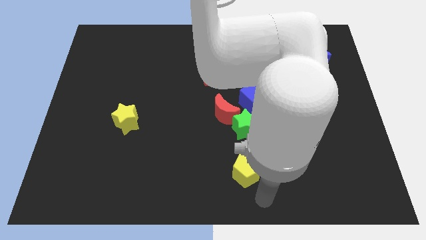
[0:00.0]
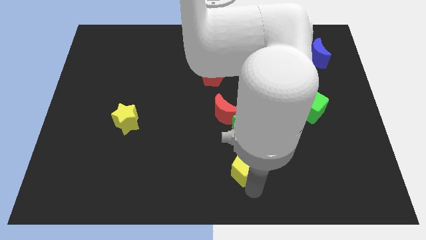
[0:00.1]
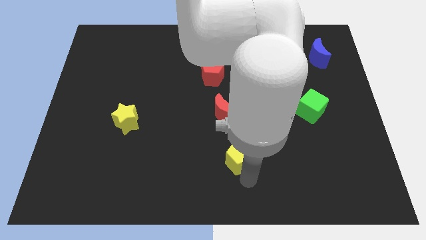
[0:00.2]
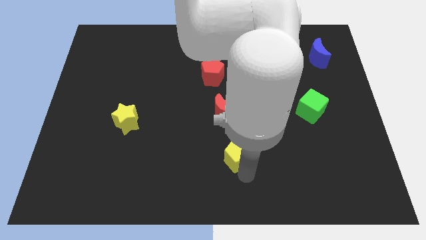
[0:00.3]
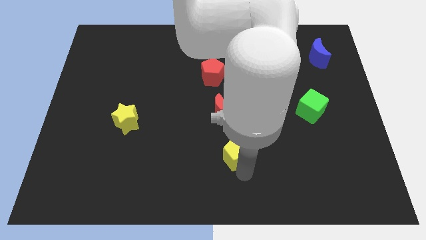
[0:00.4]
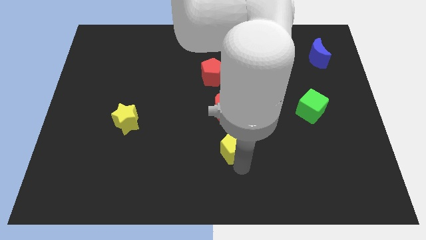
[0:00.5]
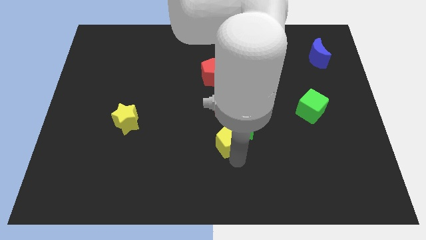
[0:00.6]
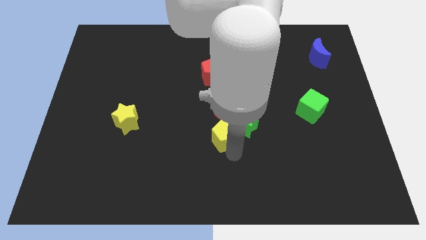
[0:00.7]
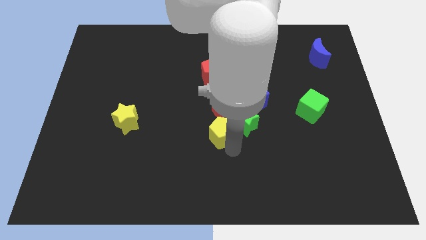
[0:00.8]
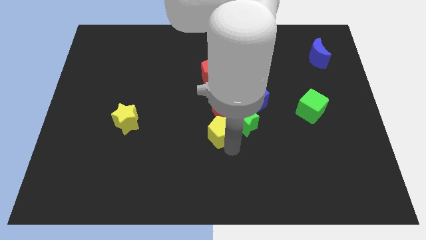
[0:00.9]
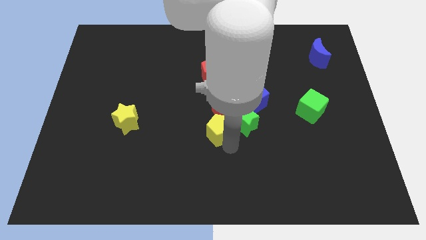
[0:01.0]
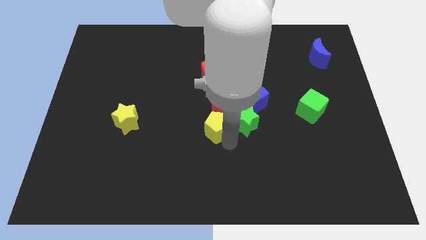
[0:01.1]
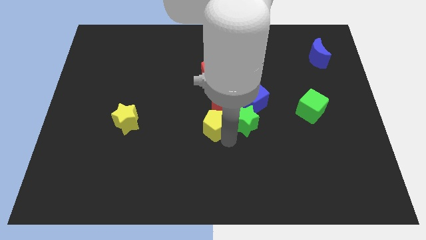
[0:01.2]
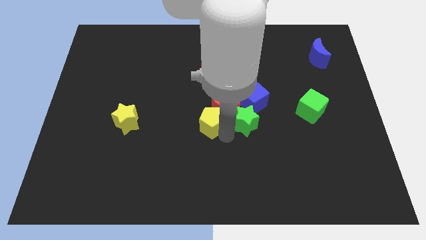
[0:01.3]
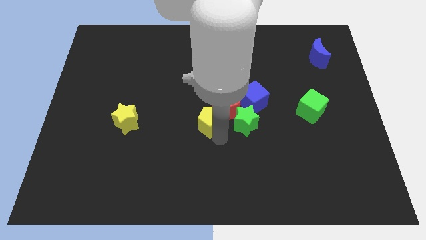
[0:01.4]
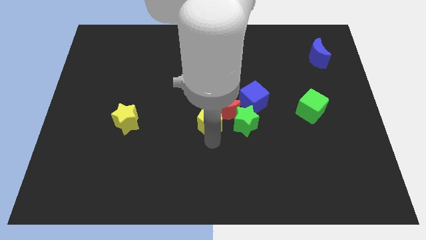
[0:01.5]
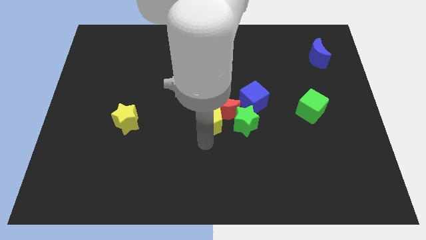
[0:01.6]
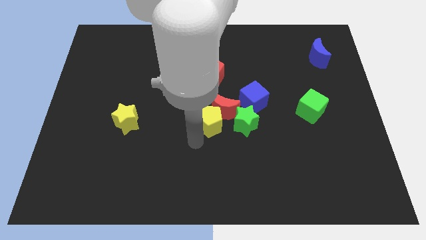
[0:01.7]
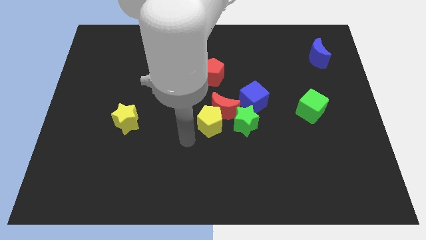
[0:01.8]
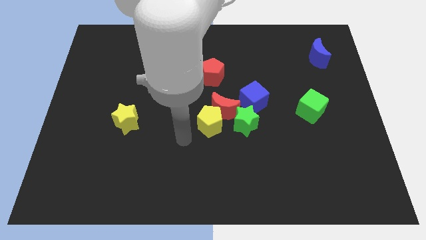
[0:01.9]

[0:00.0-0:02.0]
put the yellow pentagon to the right of the yellow star

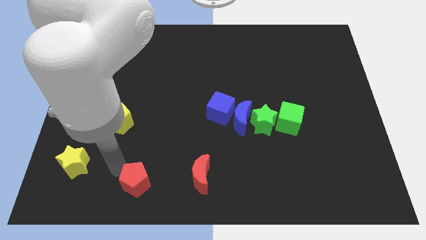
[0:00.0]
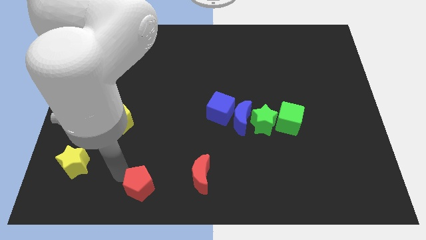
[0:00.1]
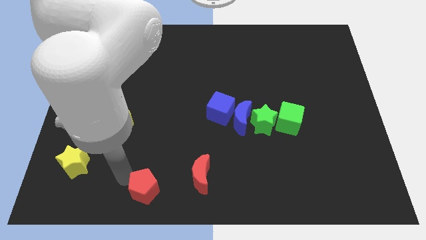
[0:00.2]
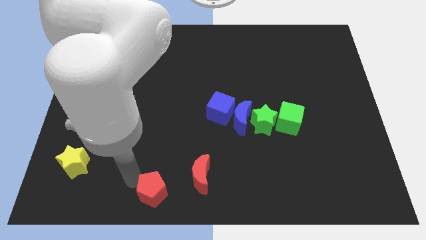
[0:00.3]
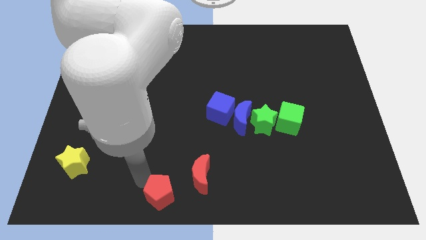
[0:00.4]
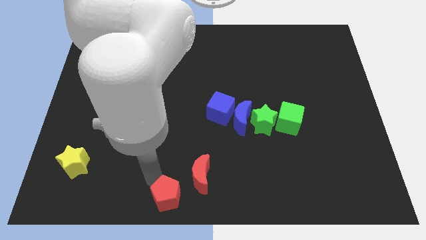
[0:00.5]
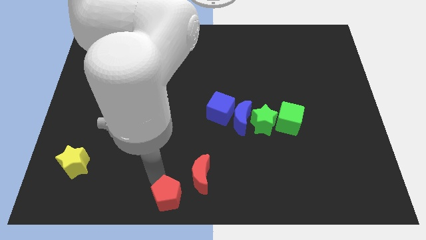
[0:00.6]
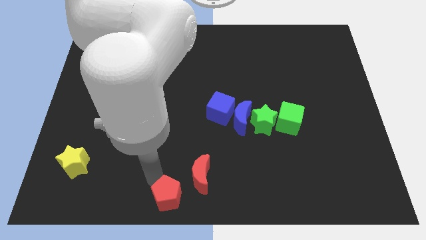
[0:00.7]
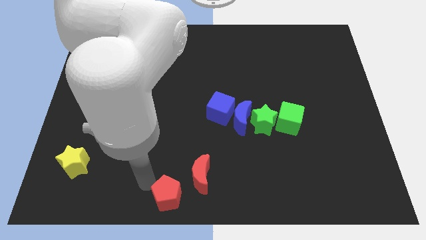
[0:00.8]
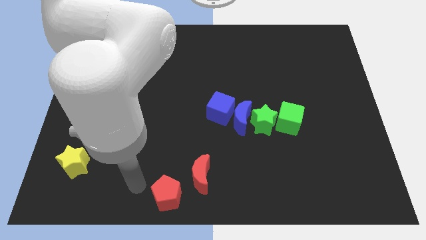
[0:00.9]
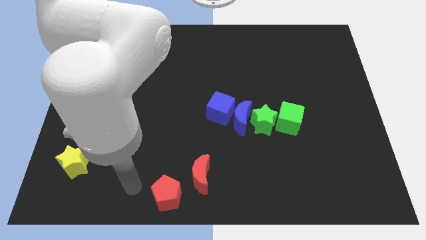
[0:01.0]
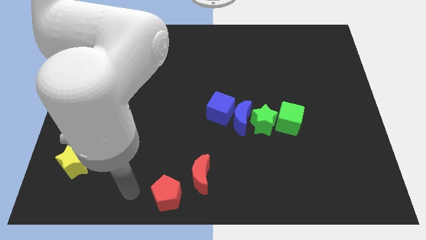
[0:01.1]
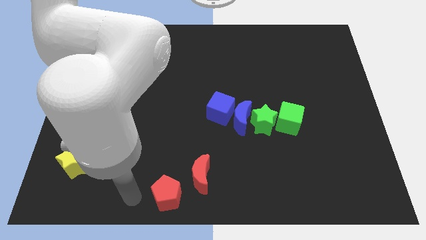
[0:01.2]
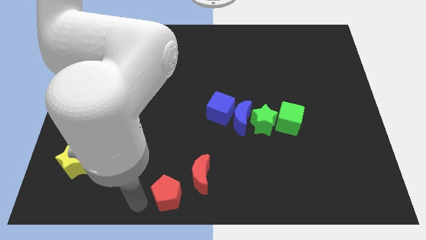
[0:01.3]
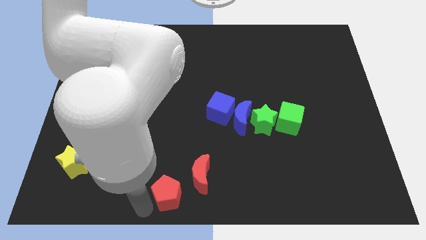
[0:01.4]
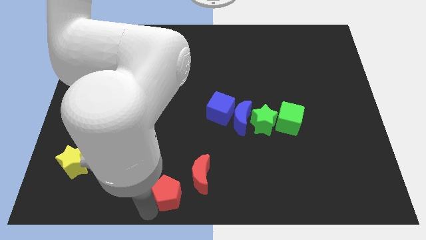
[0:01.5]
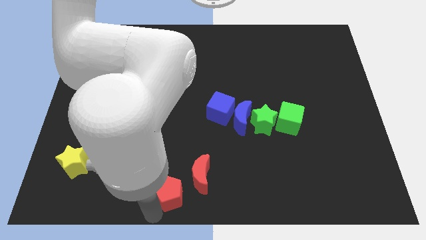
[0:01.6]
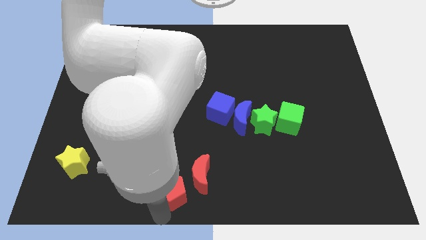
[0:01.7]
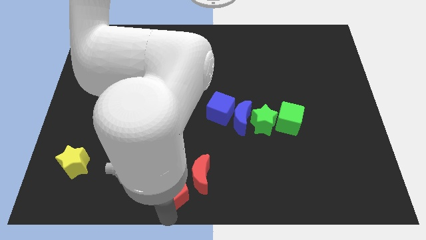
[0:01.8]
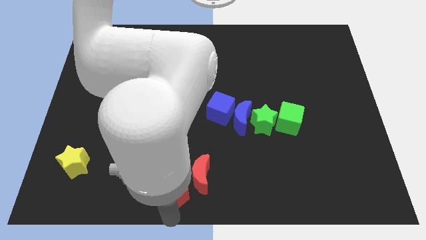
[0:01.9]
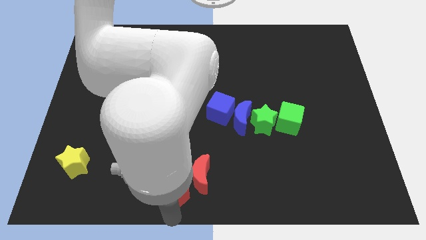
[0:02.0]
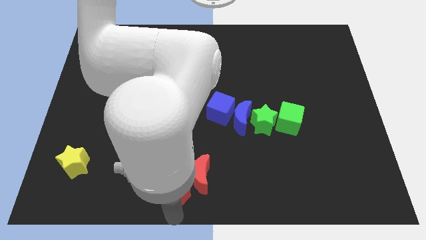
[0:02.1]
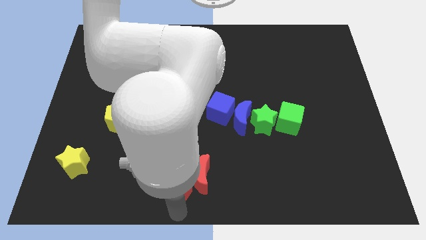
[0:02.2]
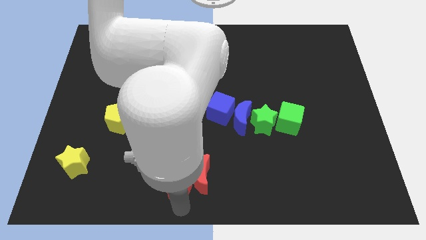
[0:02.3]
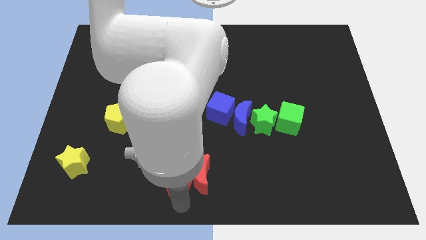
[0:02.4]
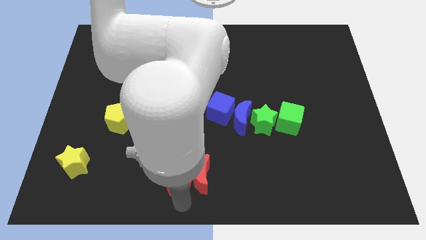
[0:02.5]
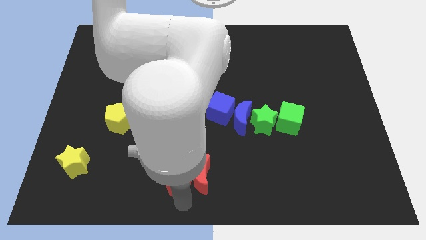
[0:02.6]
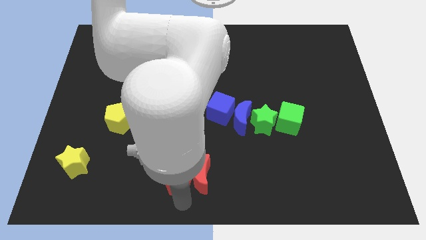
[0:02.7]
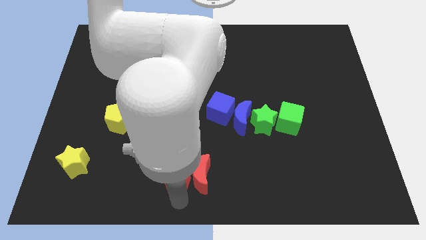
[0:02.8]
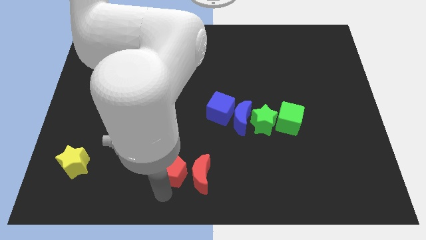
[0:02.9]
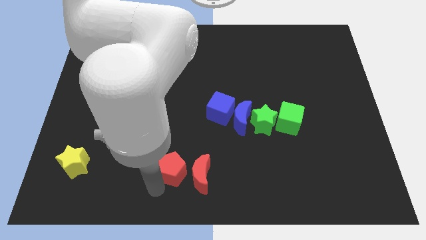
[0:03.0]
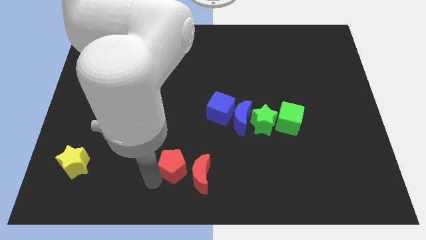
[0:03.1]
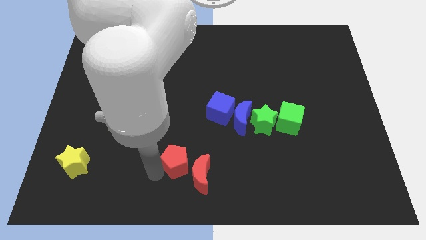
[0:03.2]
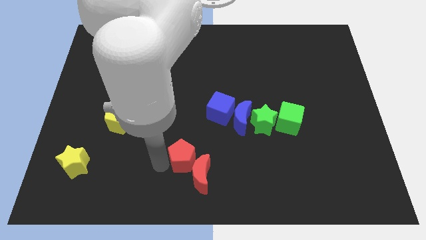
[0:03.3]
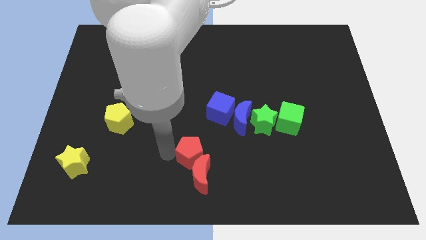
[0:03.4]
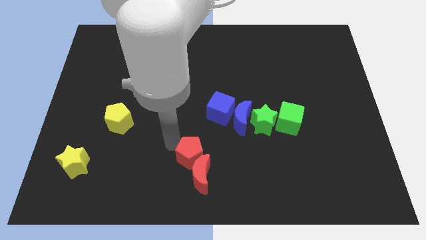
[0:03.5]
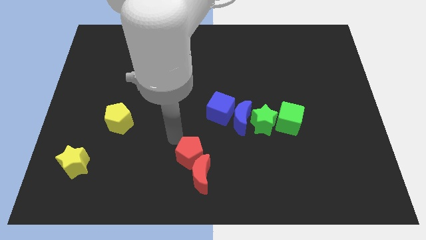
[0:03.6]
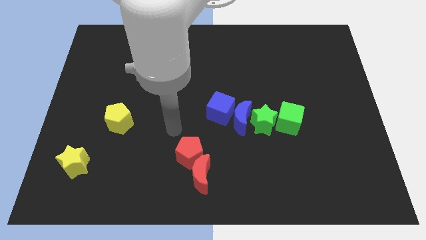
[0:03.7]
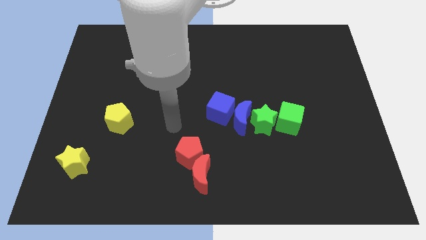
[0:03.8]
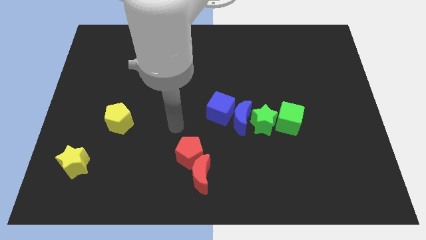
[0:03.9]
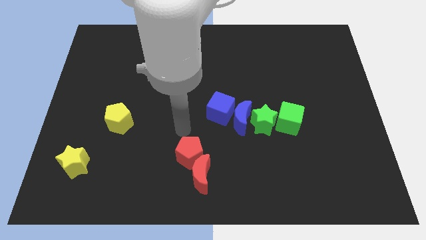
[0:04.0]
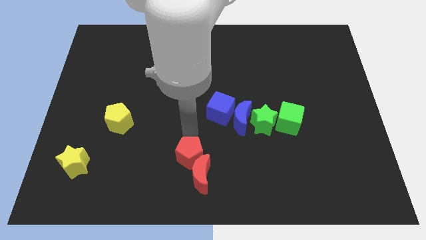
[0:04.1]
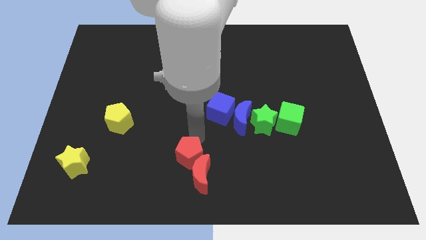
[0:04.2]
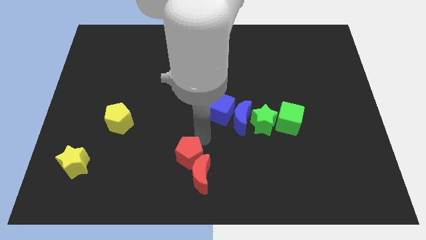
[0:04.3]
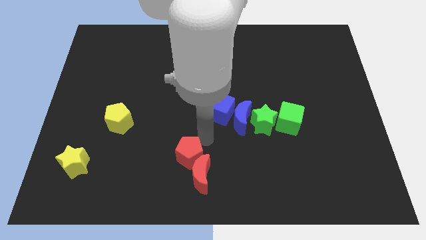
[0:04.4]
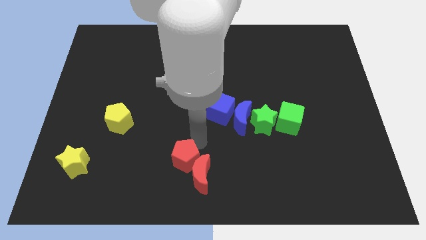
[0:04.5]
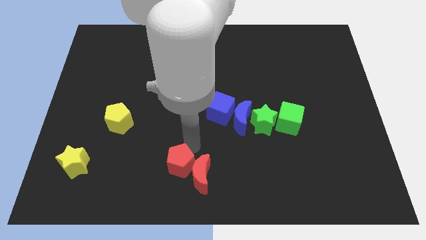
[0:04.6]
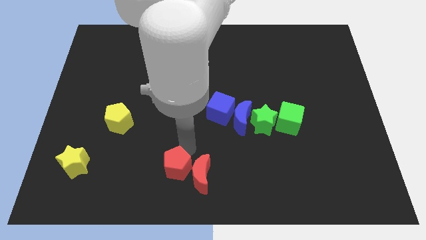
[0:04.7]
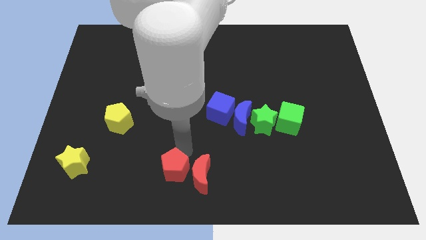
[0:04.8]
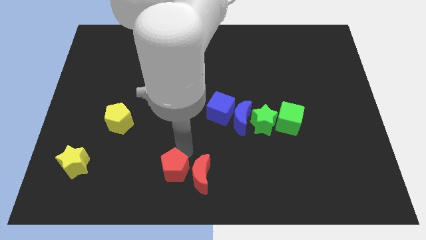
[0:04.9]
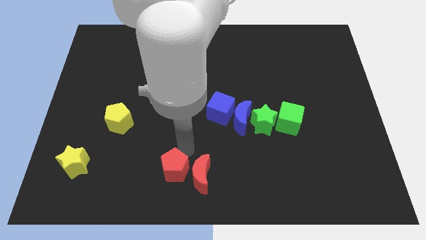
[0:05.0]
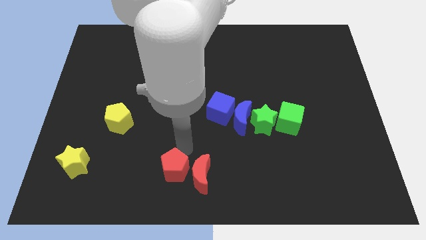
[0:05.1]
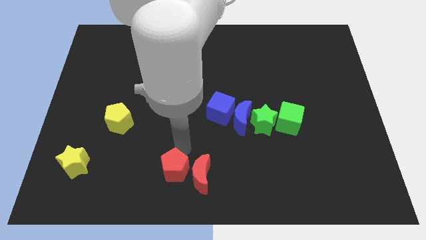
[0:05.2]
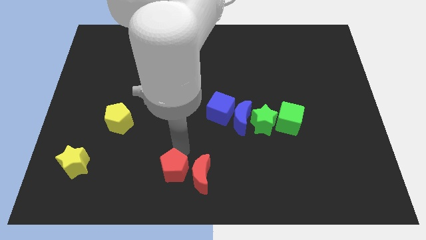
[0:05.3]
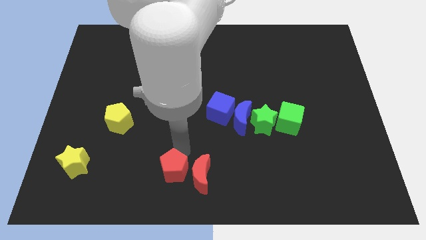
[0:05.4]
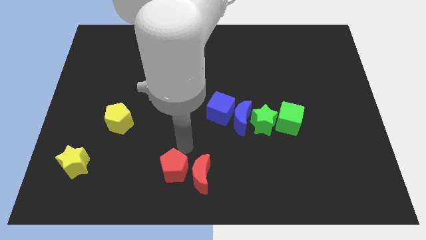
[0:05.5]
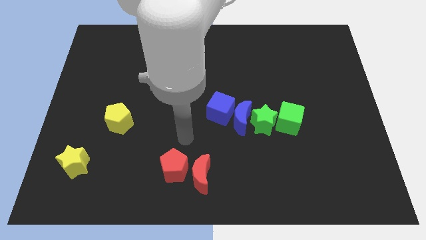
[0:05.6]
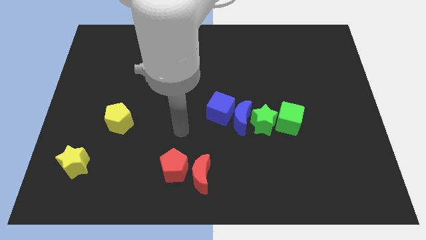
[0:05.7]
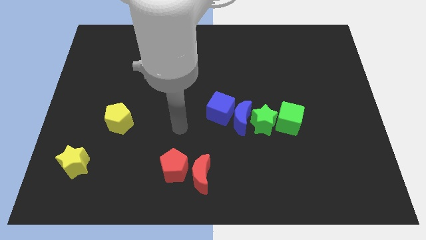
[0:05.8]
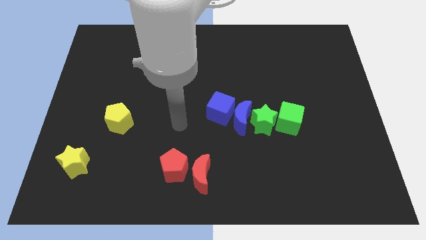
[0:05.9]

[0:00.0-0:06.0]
put the red pentagon on the left side of the red crescent

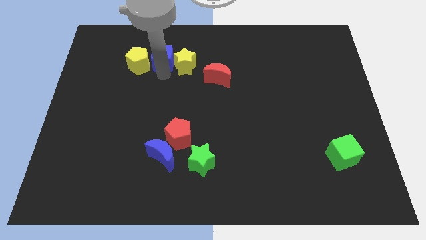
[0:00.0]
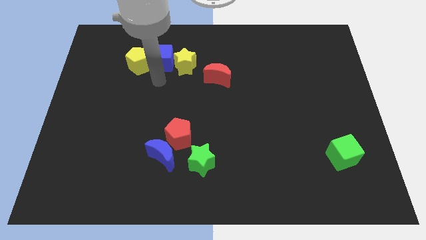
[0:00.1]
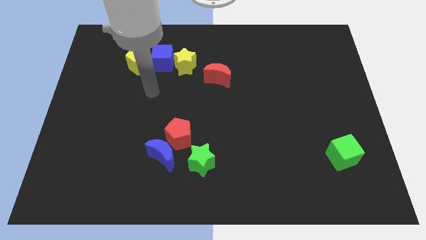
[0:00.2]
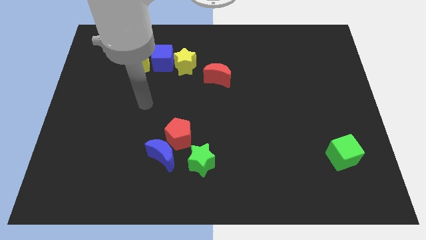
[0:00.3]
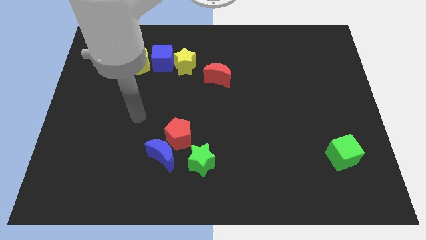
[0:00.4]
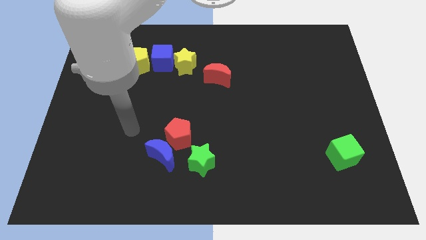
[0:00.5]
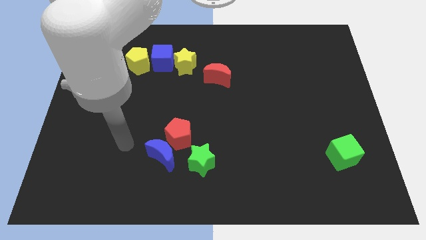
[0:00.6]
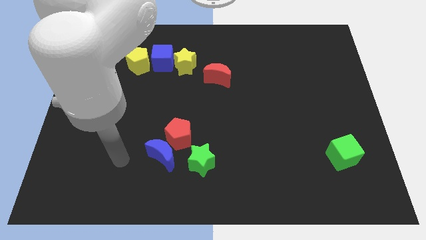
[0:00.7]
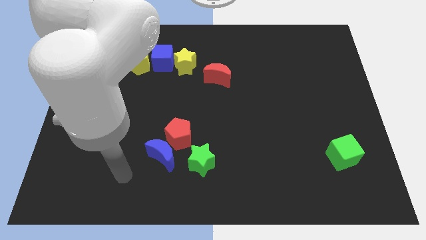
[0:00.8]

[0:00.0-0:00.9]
move your arm away from blue cube

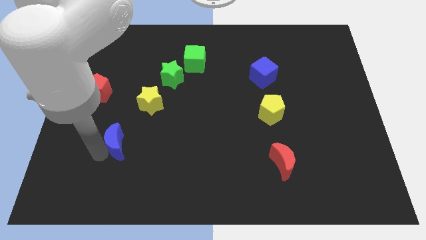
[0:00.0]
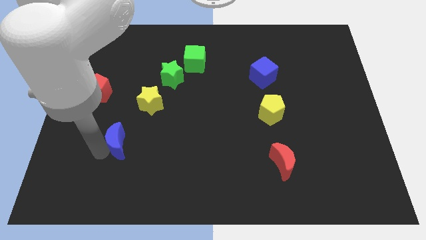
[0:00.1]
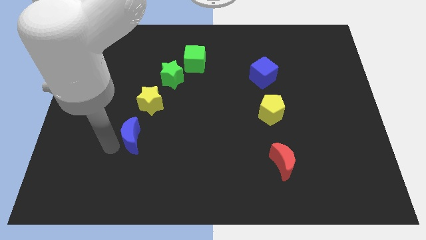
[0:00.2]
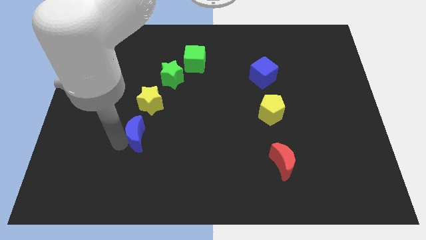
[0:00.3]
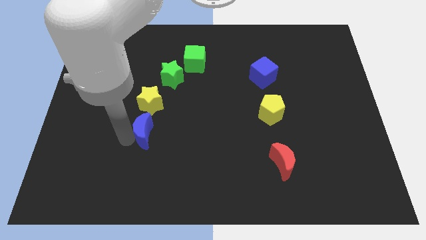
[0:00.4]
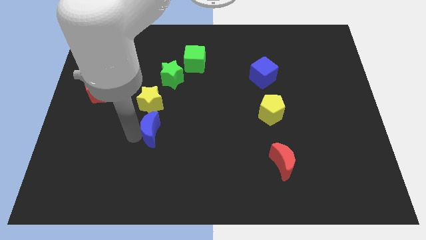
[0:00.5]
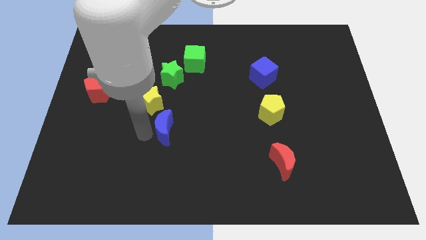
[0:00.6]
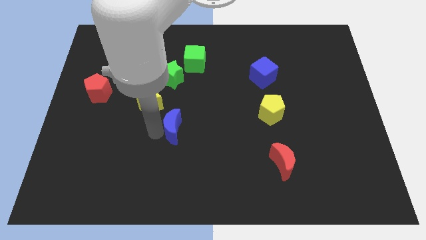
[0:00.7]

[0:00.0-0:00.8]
place the blue moon diagonal to the yellow star
